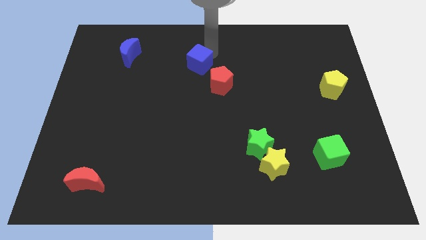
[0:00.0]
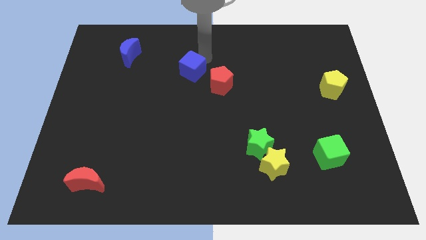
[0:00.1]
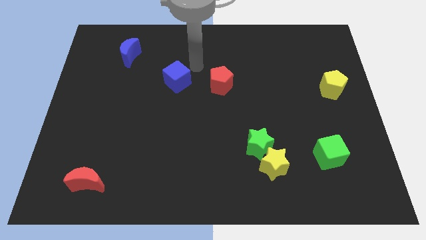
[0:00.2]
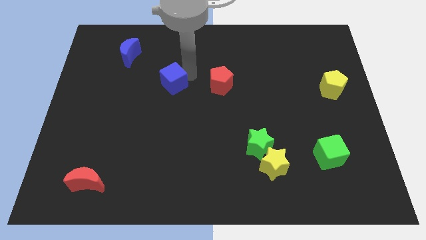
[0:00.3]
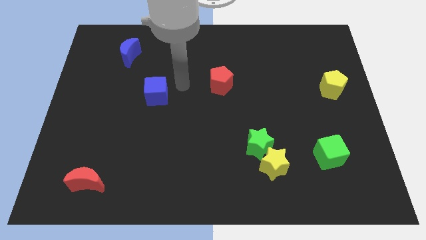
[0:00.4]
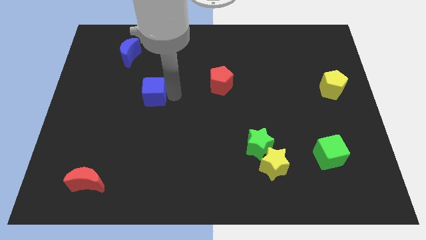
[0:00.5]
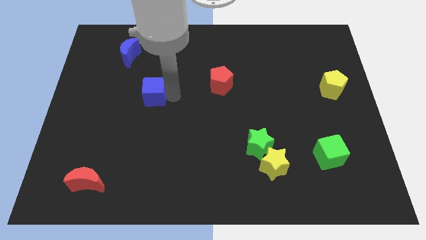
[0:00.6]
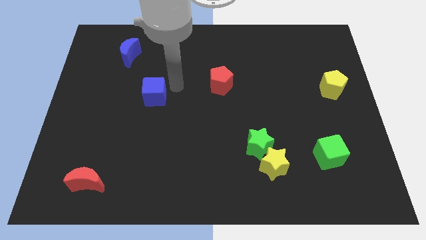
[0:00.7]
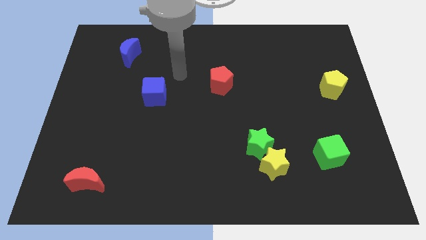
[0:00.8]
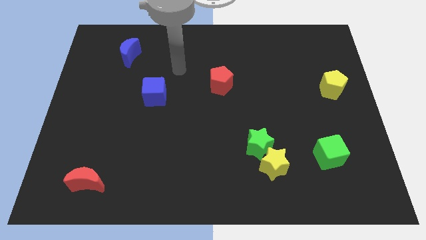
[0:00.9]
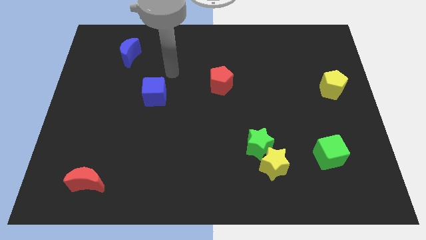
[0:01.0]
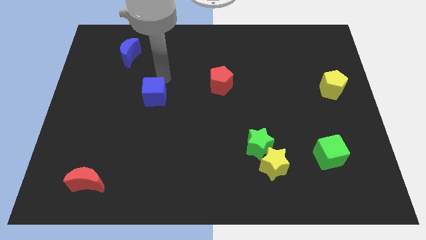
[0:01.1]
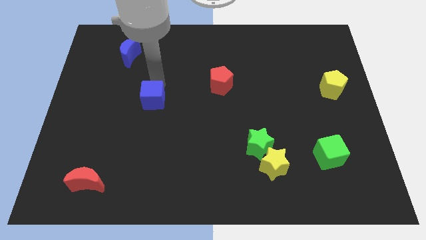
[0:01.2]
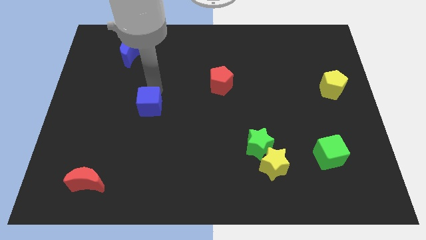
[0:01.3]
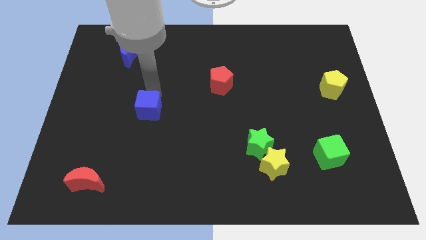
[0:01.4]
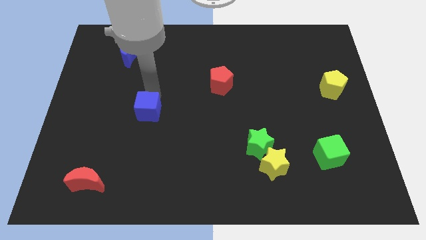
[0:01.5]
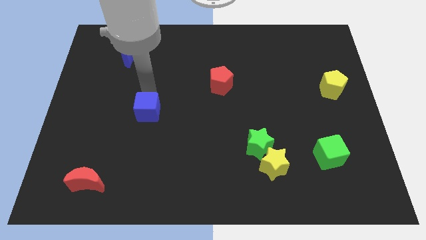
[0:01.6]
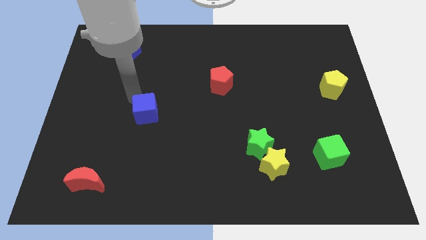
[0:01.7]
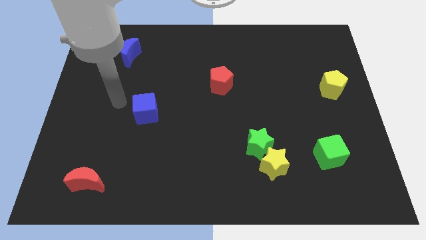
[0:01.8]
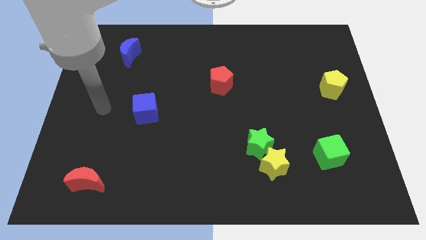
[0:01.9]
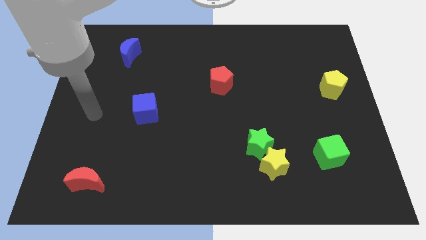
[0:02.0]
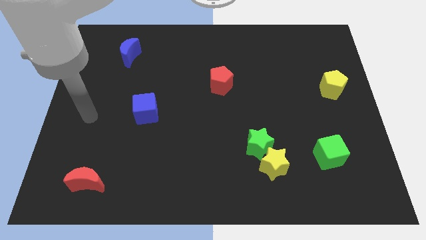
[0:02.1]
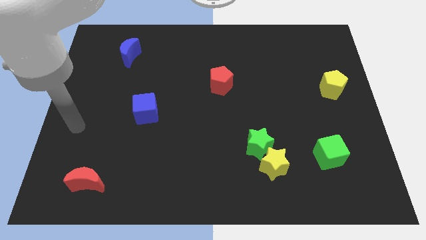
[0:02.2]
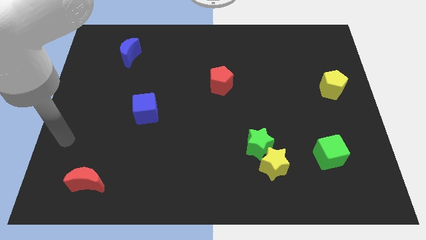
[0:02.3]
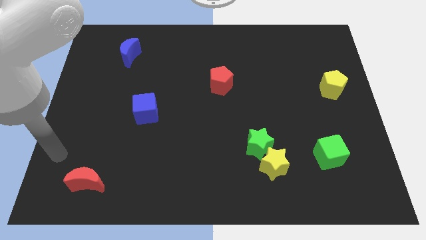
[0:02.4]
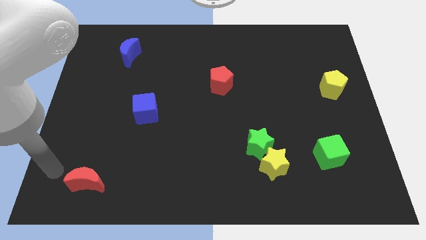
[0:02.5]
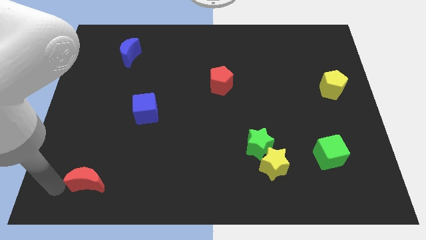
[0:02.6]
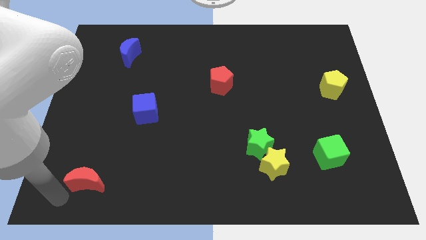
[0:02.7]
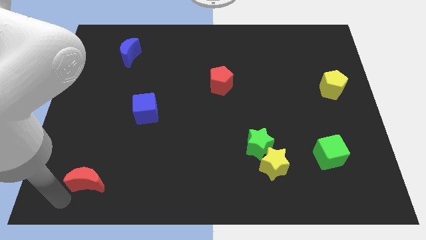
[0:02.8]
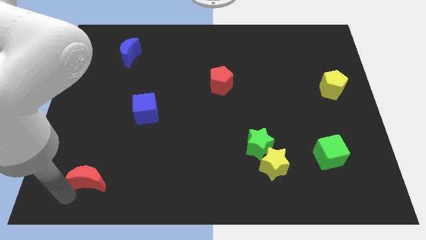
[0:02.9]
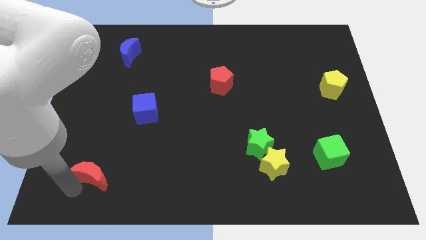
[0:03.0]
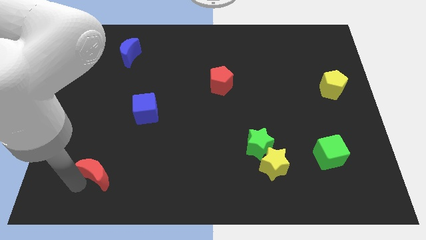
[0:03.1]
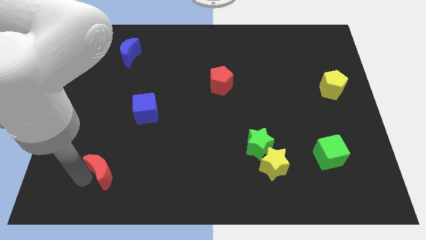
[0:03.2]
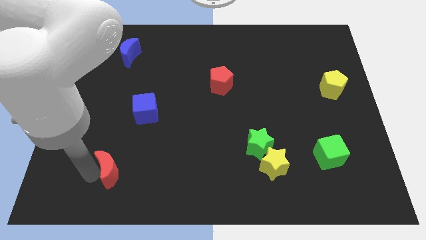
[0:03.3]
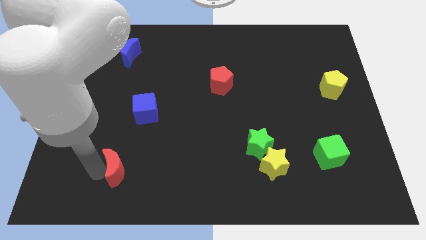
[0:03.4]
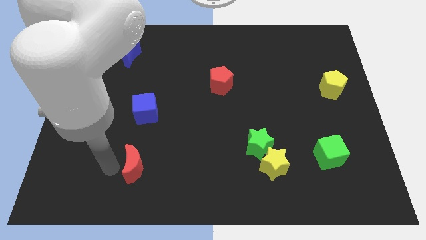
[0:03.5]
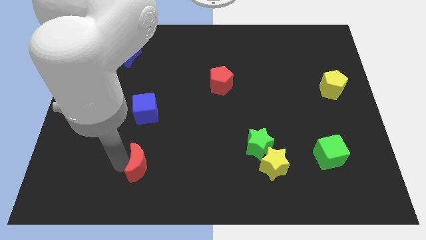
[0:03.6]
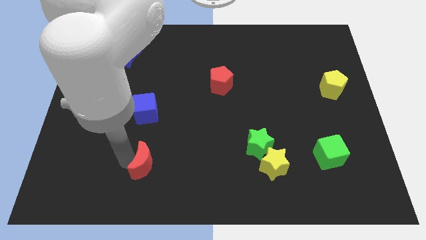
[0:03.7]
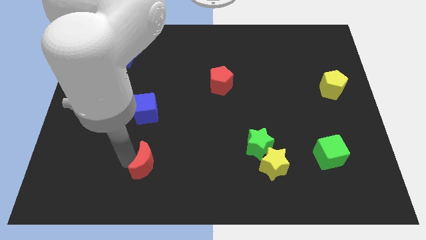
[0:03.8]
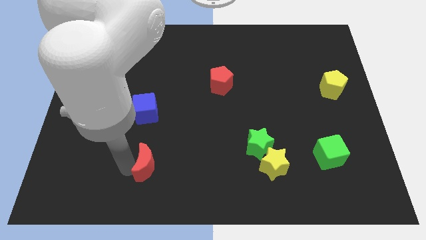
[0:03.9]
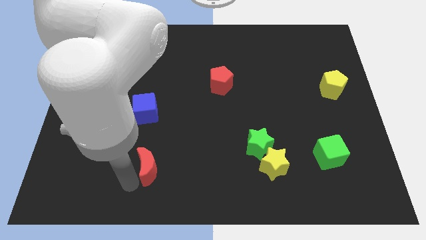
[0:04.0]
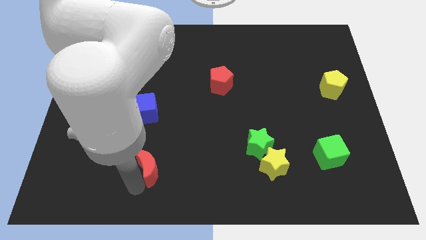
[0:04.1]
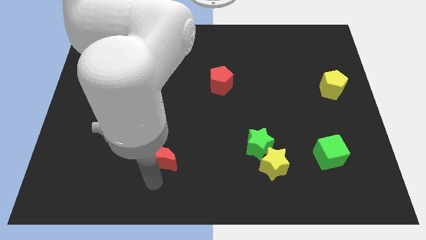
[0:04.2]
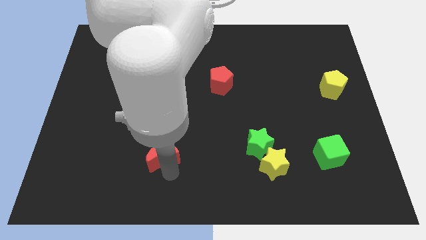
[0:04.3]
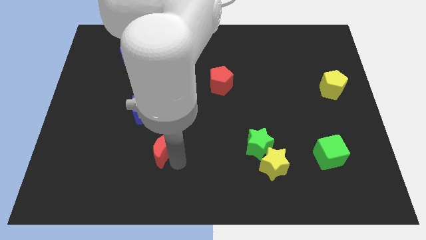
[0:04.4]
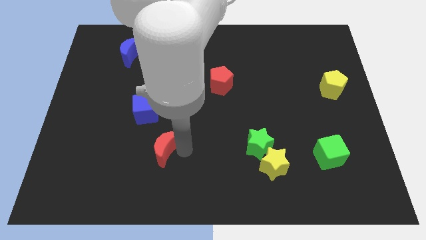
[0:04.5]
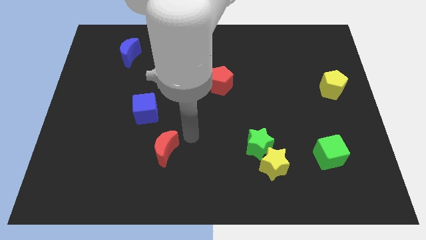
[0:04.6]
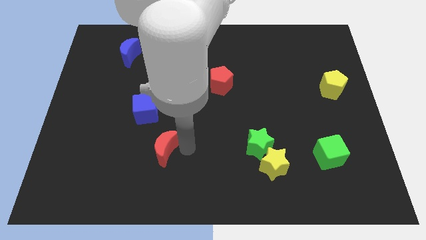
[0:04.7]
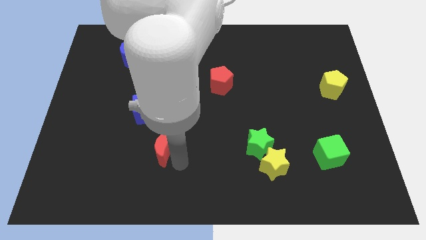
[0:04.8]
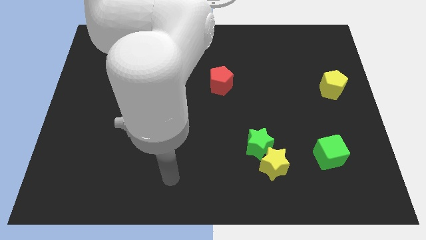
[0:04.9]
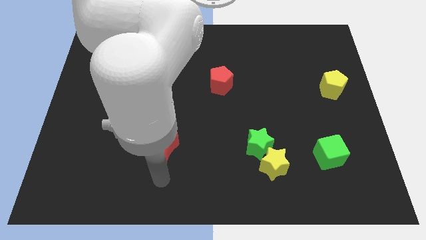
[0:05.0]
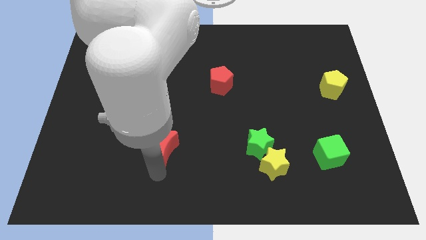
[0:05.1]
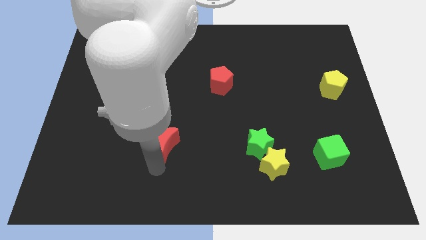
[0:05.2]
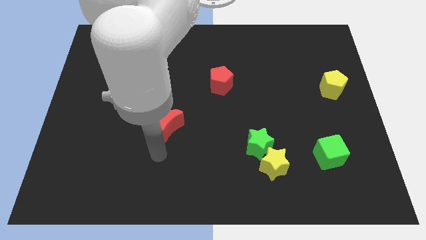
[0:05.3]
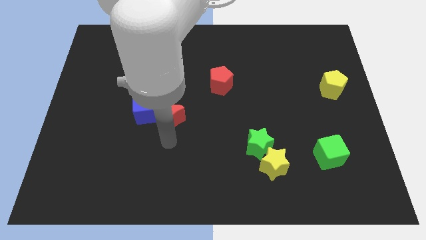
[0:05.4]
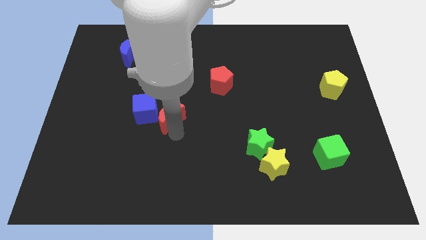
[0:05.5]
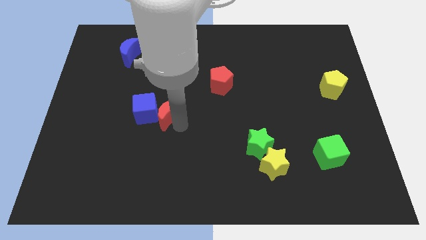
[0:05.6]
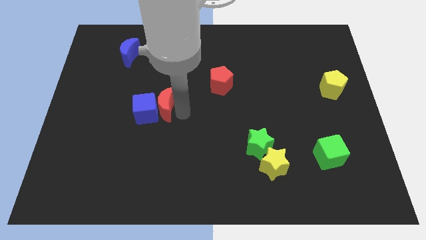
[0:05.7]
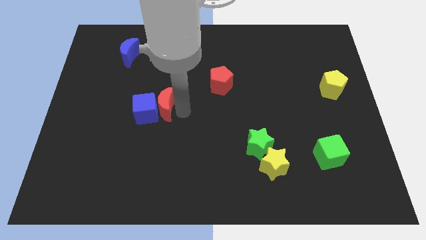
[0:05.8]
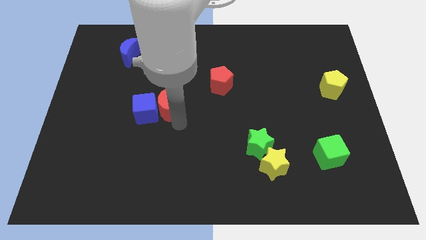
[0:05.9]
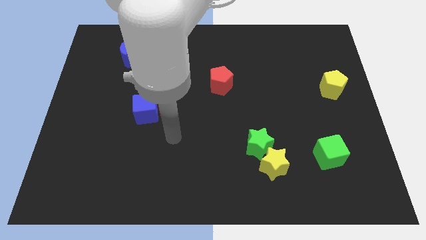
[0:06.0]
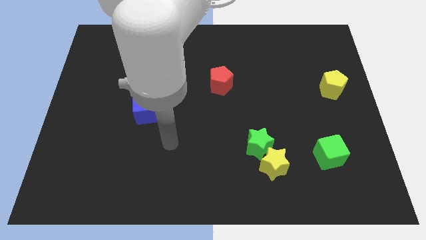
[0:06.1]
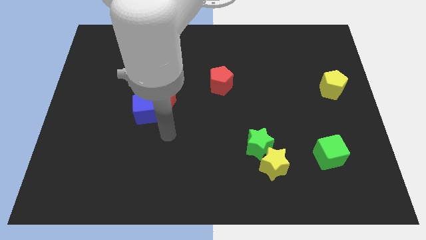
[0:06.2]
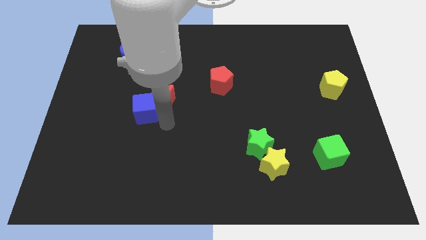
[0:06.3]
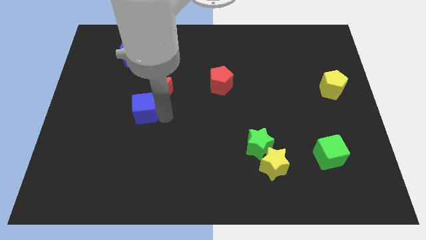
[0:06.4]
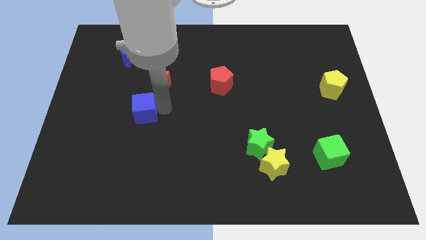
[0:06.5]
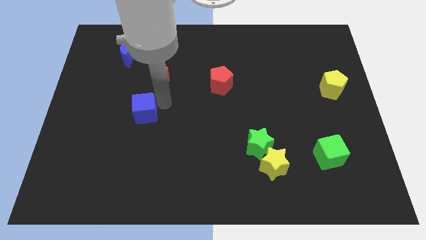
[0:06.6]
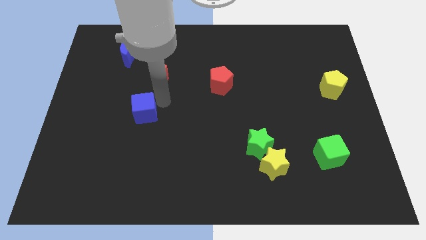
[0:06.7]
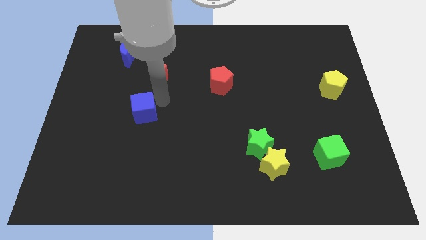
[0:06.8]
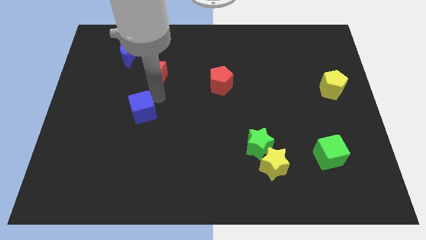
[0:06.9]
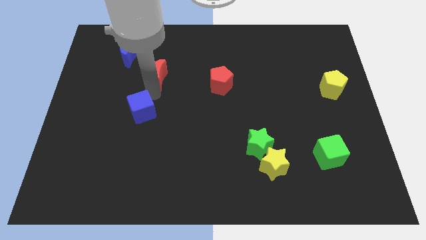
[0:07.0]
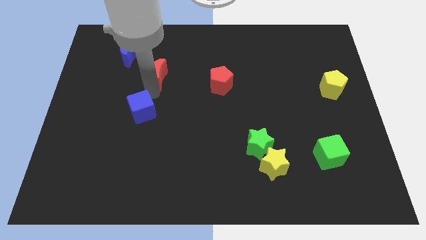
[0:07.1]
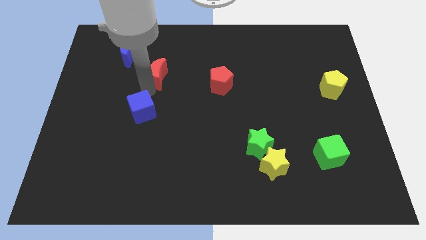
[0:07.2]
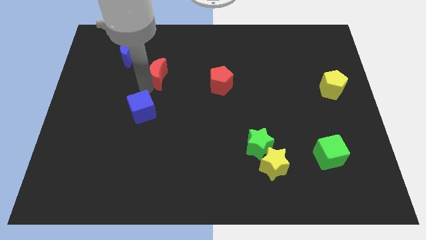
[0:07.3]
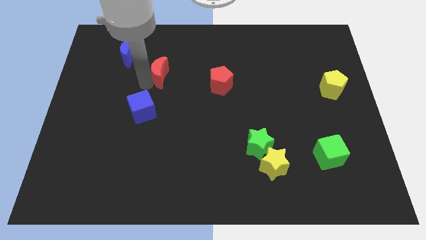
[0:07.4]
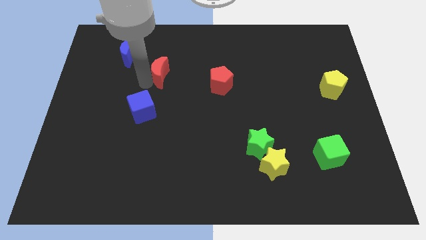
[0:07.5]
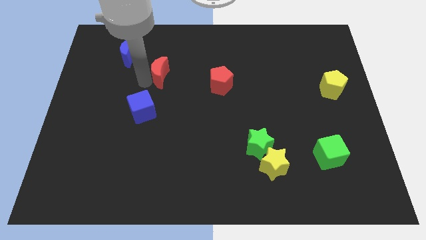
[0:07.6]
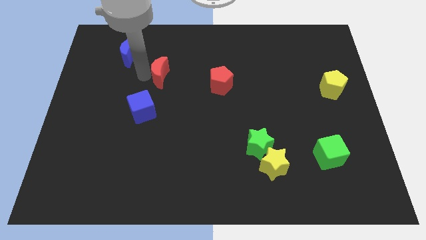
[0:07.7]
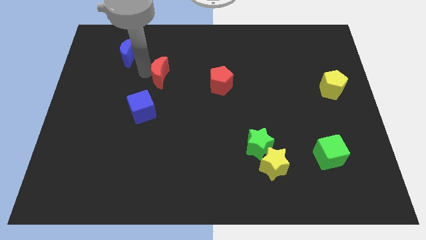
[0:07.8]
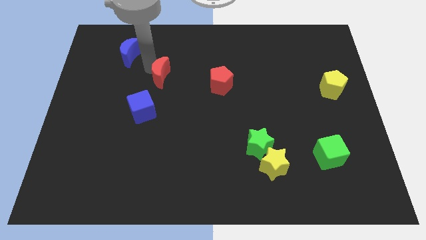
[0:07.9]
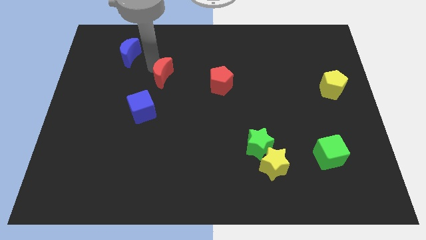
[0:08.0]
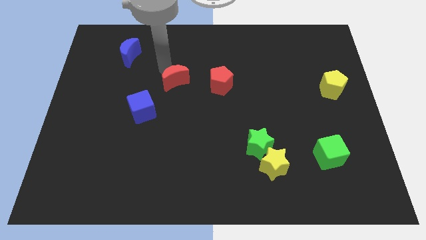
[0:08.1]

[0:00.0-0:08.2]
move the red crescent diagonally to the blue moon

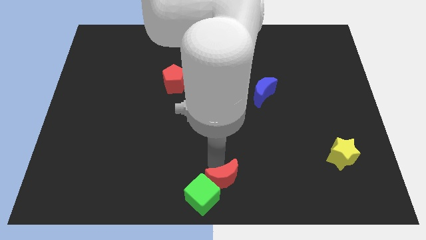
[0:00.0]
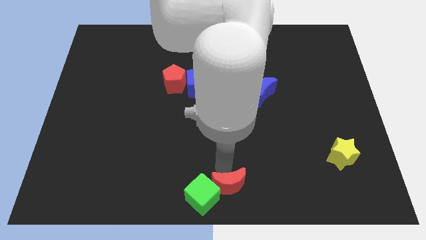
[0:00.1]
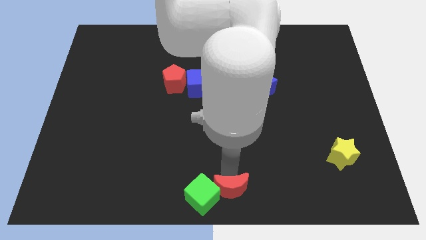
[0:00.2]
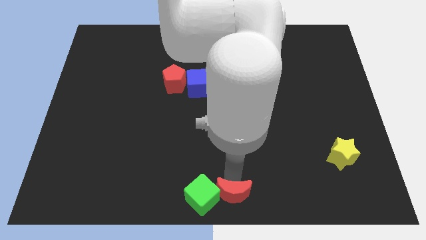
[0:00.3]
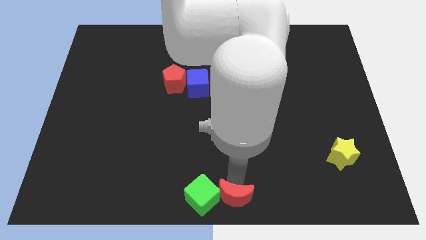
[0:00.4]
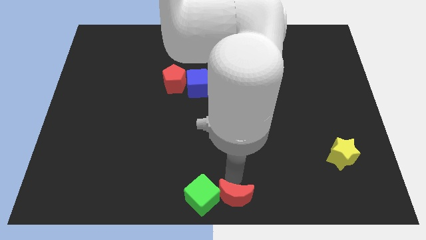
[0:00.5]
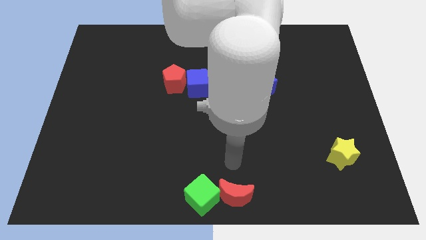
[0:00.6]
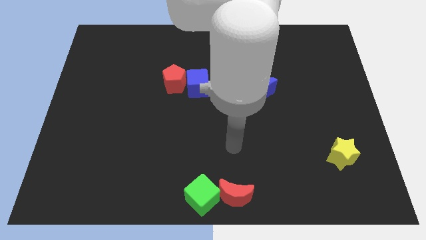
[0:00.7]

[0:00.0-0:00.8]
place the red crescent at the bottom center of the board

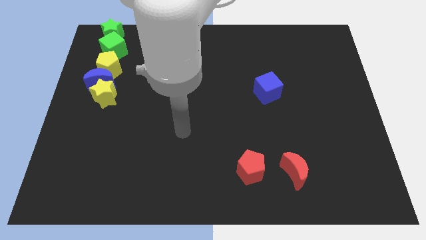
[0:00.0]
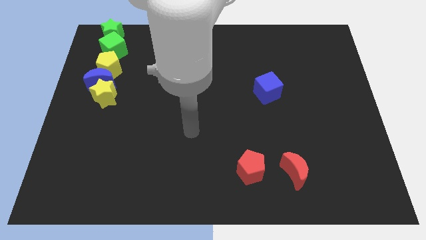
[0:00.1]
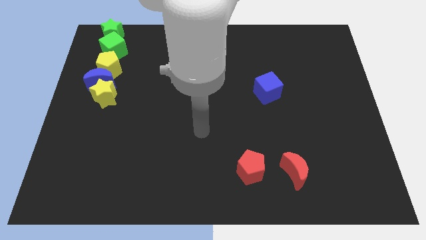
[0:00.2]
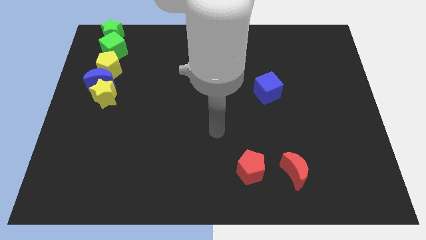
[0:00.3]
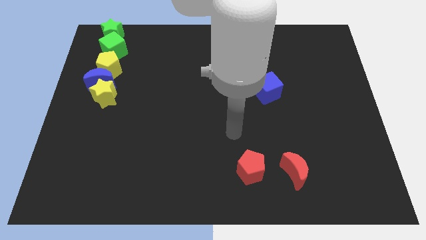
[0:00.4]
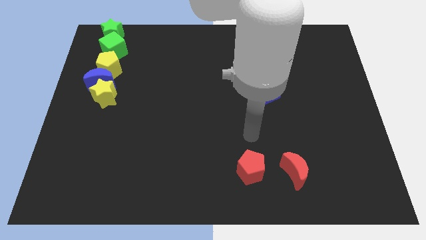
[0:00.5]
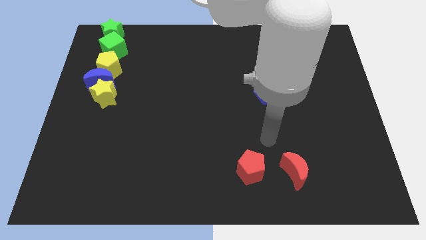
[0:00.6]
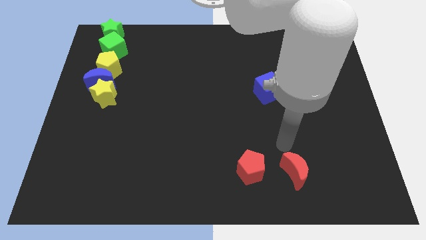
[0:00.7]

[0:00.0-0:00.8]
move arm near red moon
